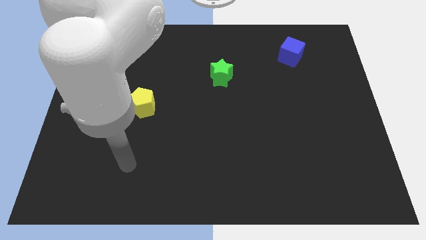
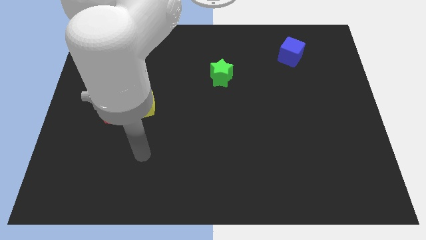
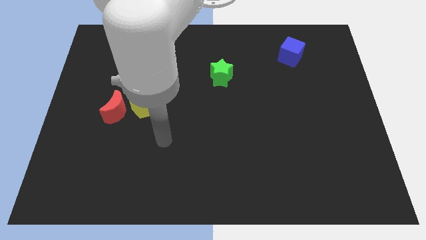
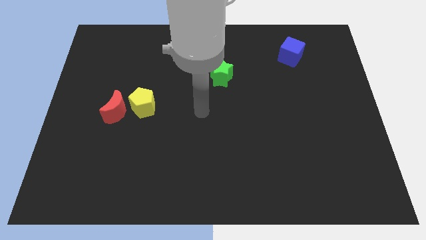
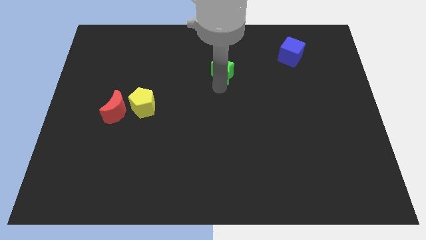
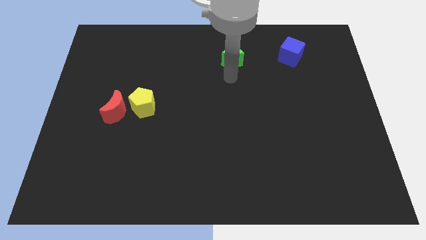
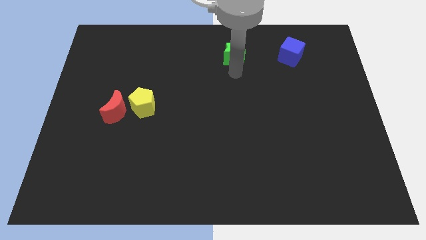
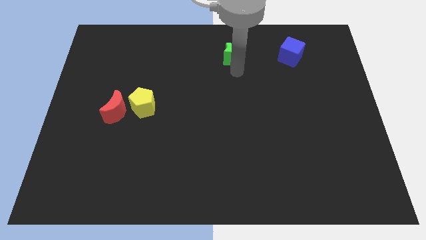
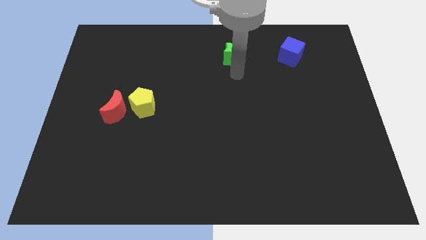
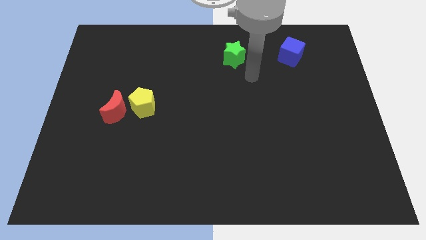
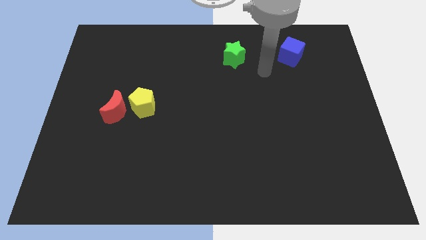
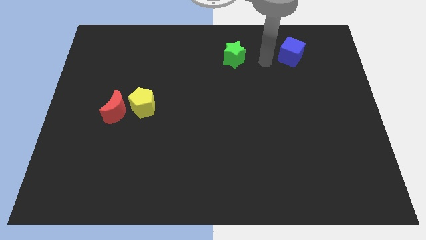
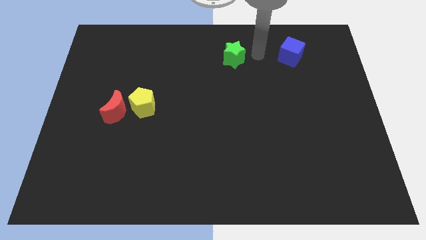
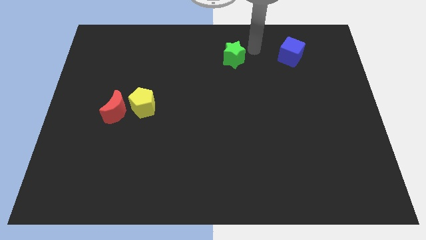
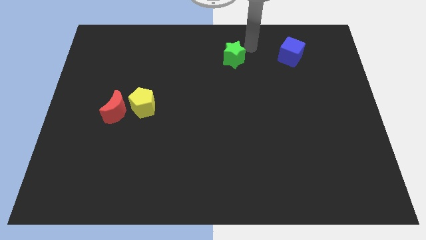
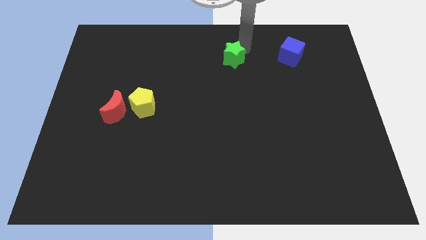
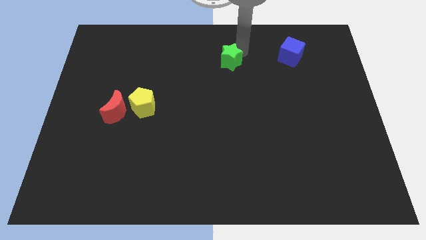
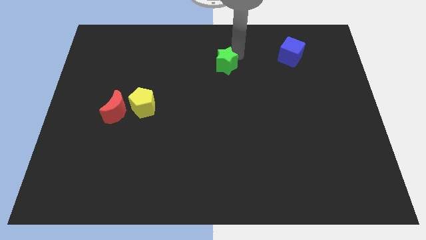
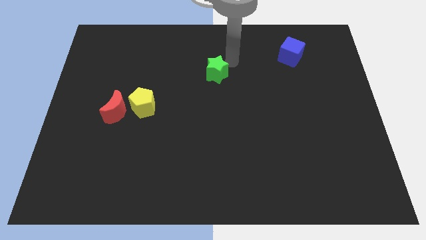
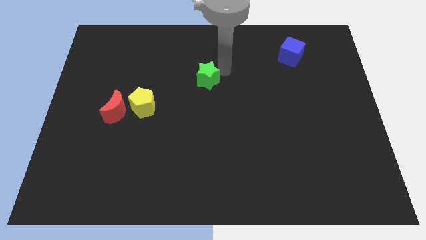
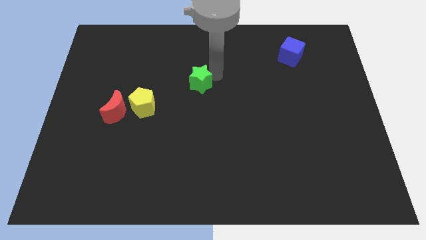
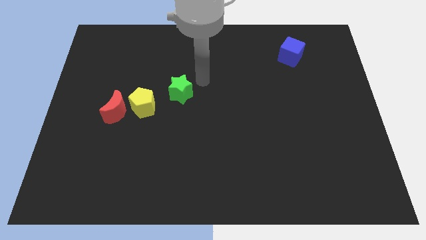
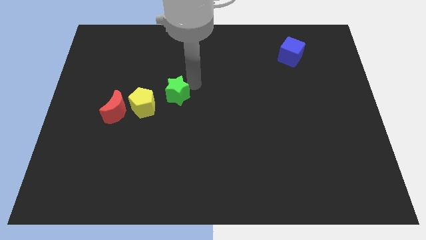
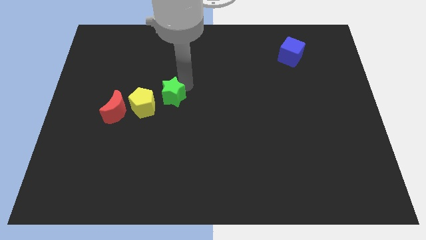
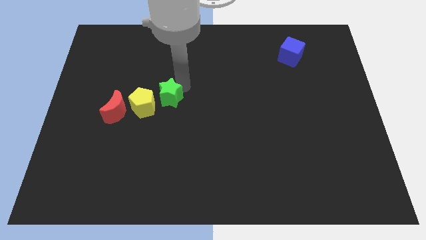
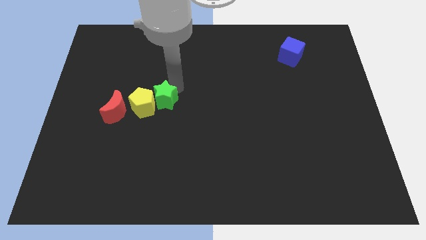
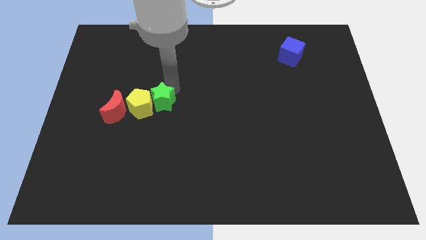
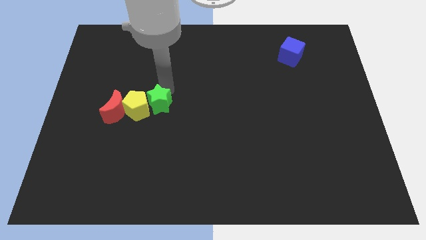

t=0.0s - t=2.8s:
move the green block to the yellow block

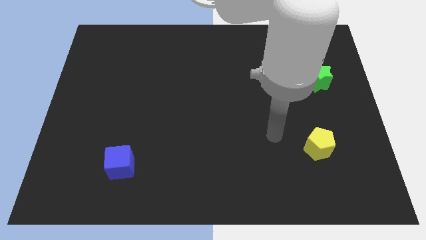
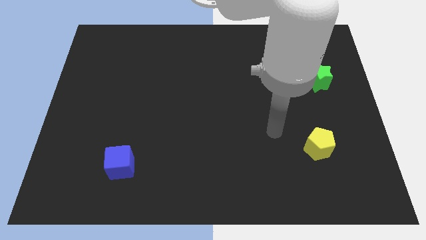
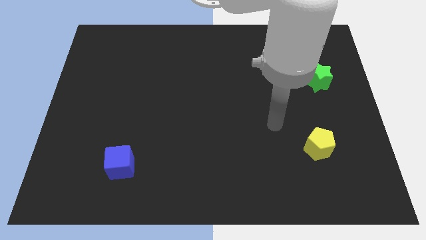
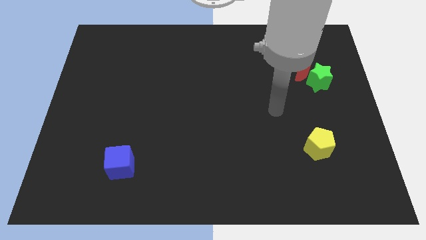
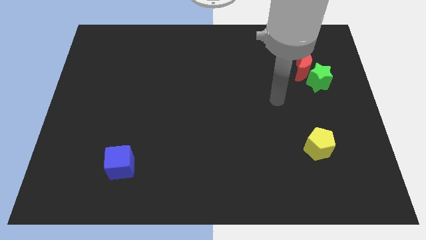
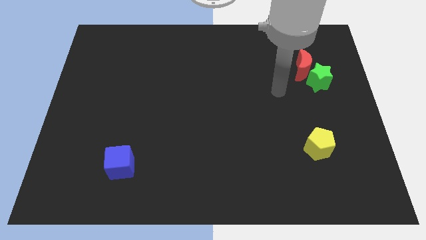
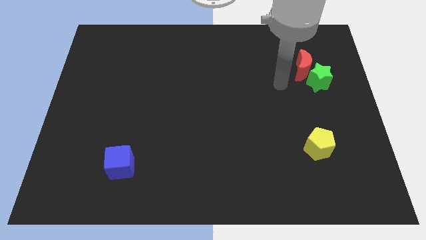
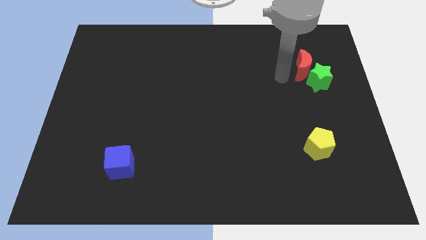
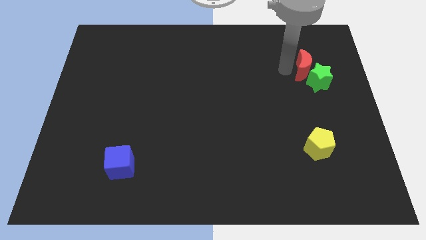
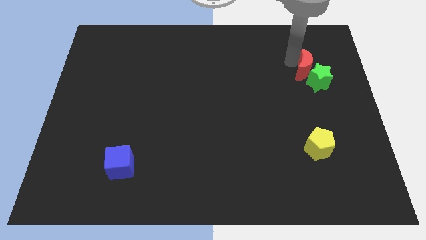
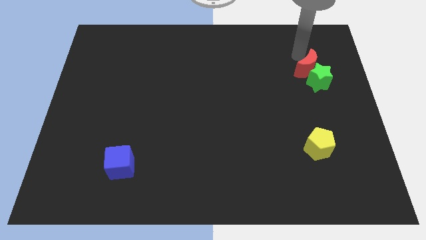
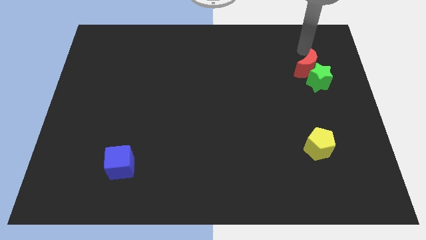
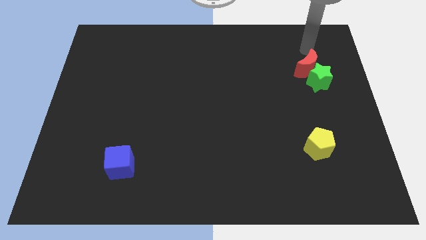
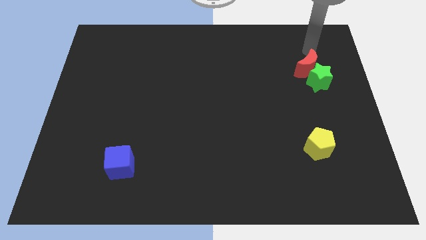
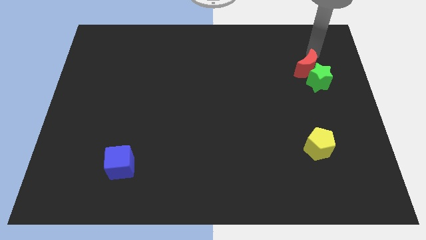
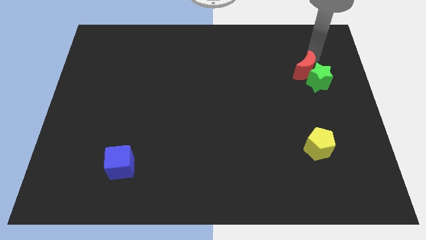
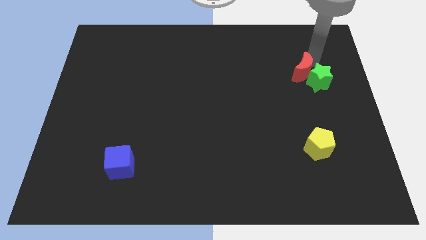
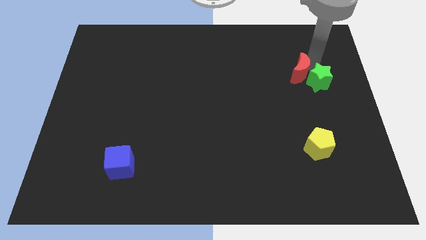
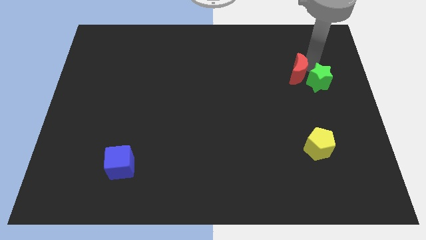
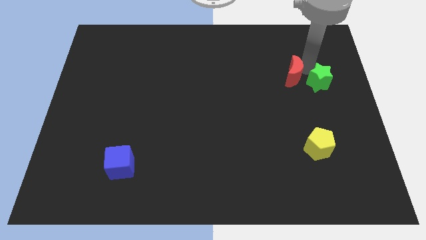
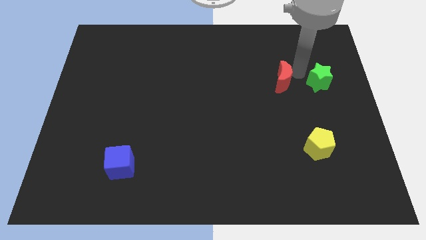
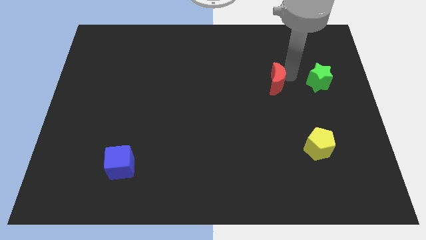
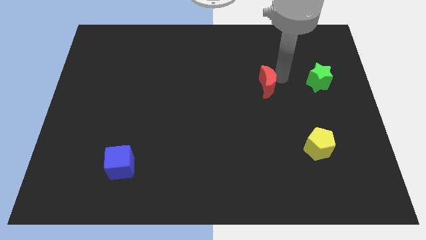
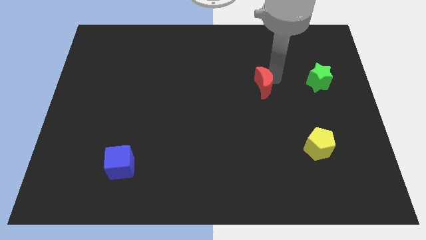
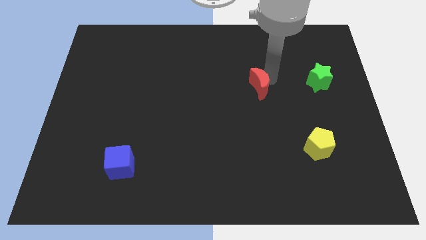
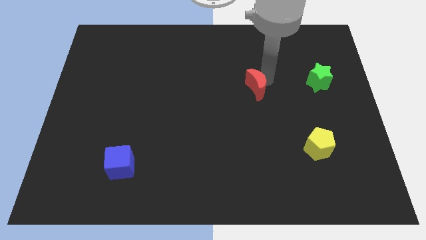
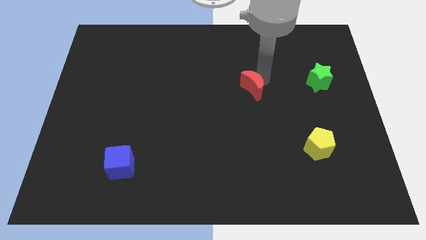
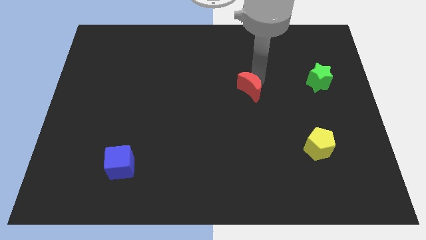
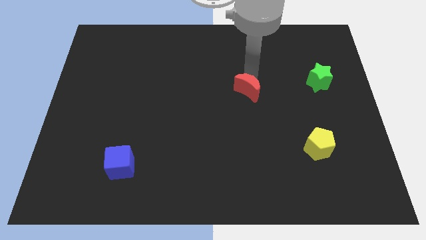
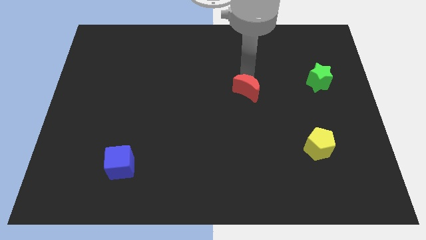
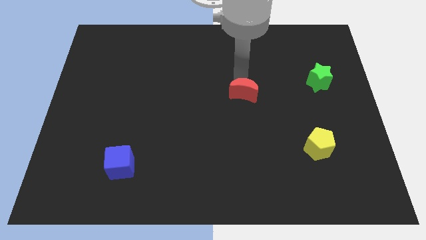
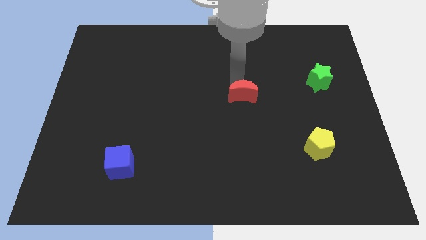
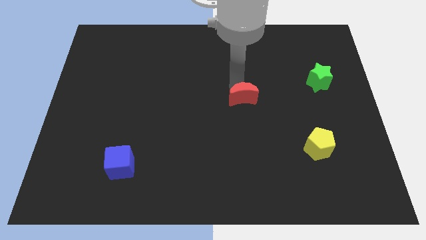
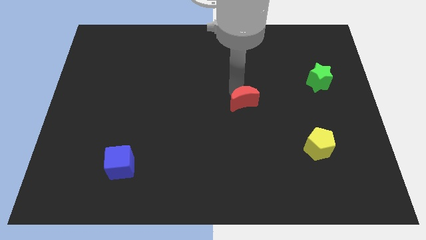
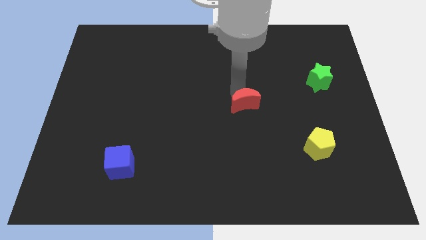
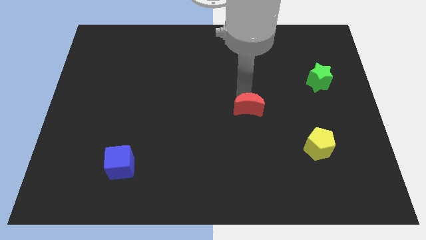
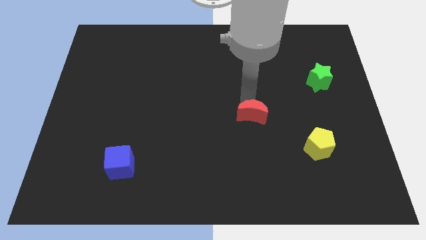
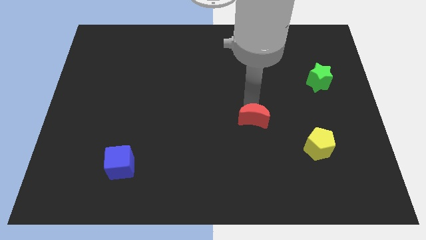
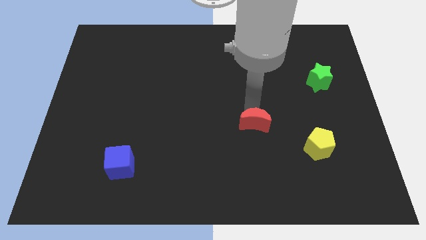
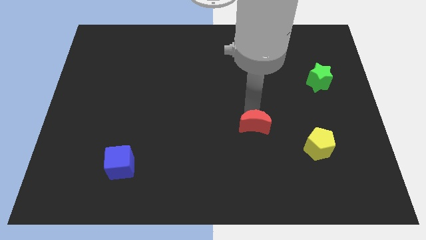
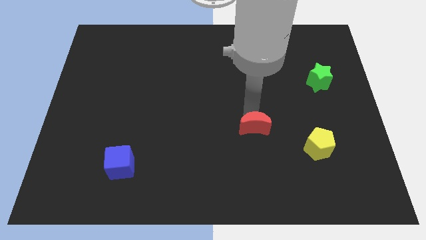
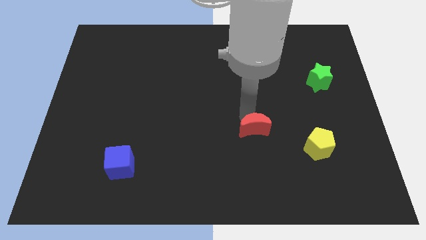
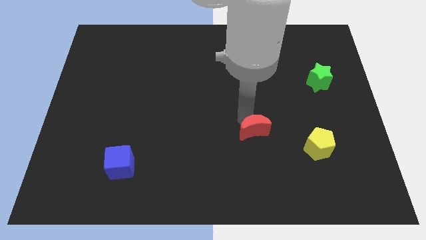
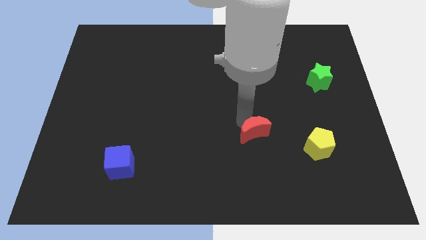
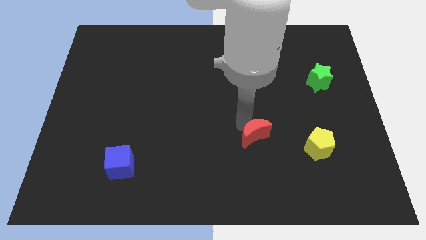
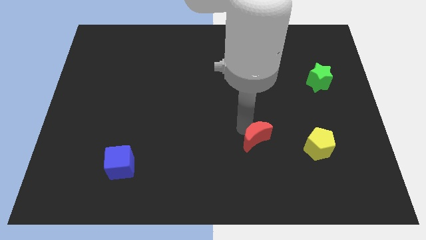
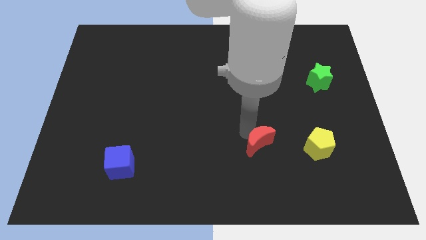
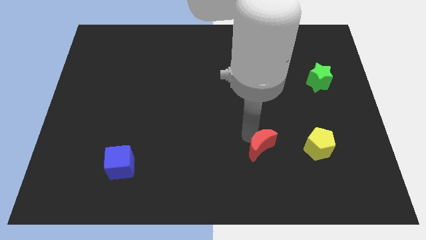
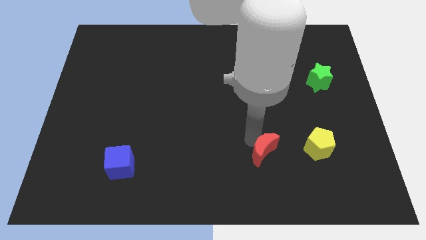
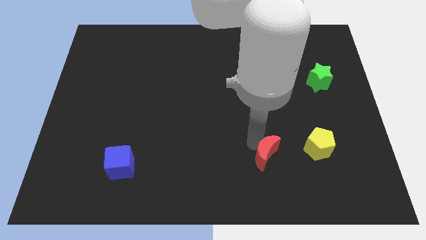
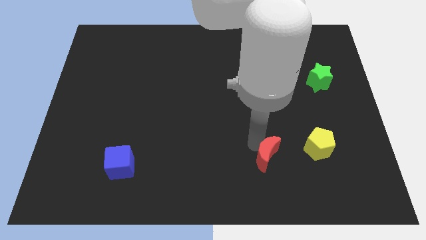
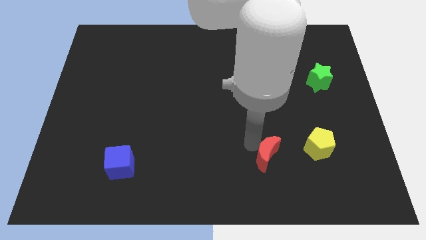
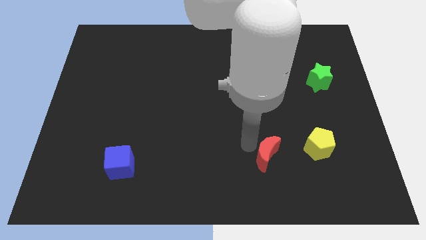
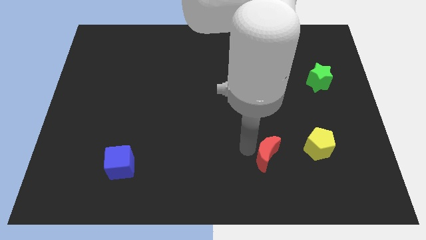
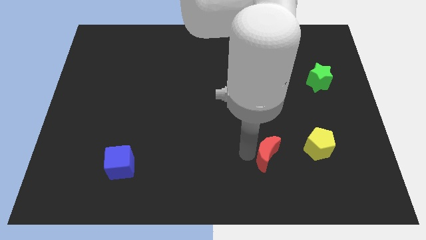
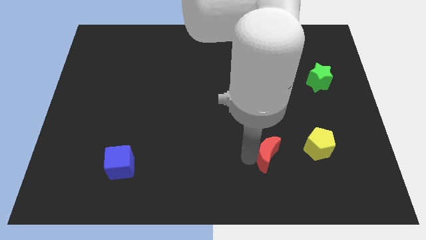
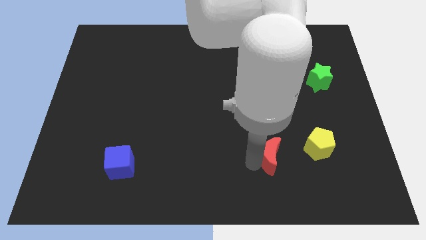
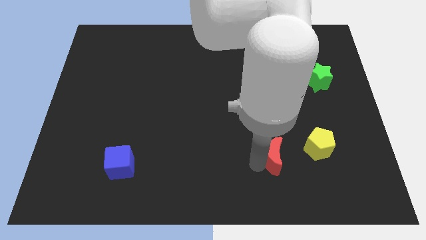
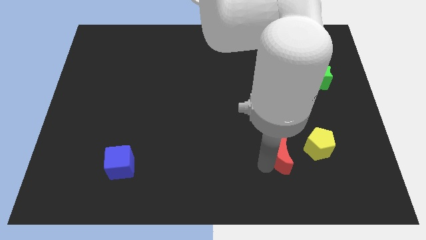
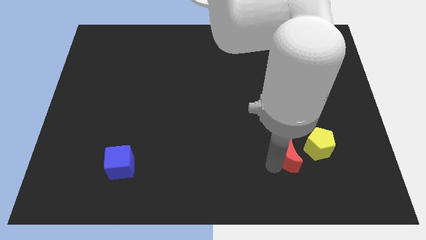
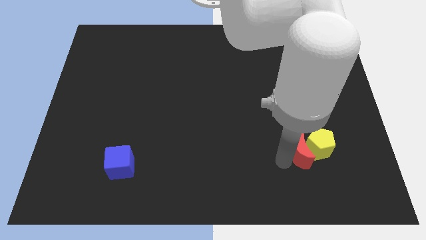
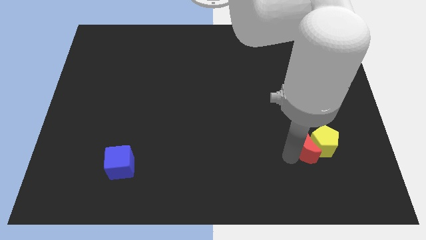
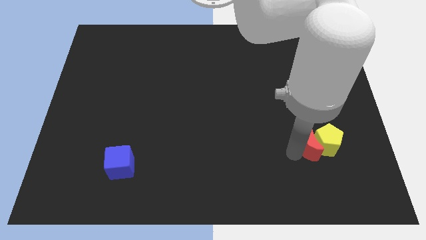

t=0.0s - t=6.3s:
push the red block next to the pentagon
